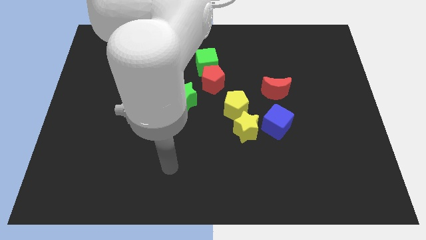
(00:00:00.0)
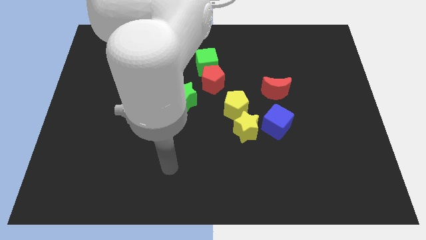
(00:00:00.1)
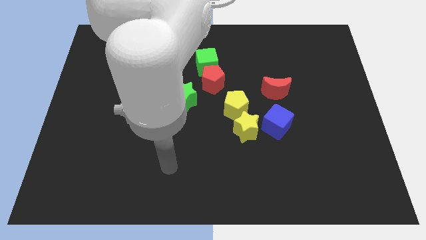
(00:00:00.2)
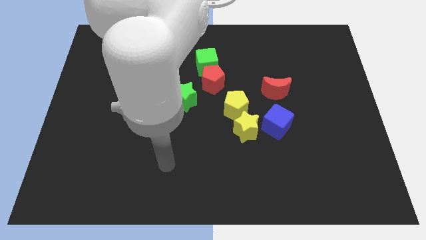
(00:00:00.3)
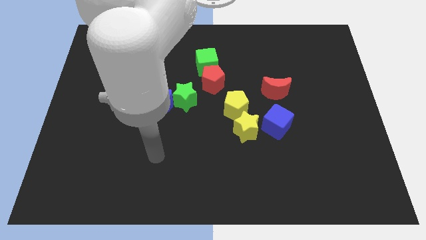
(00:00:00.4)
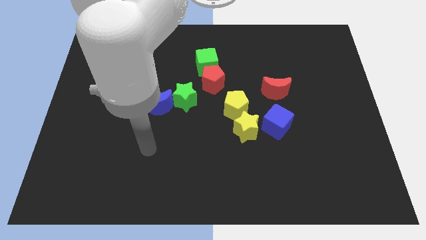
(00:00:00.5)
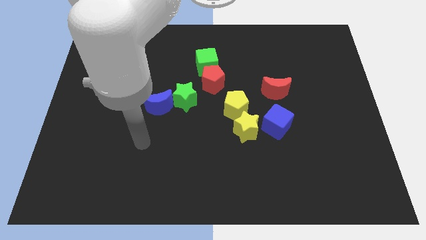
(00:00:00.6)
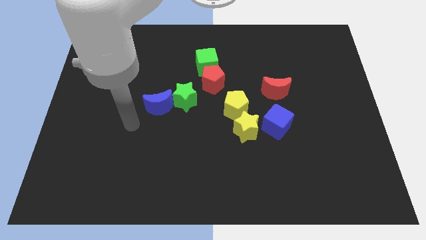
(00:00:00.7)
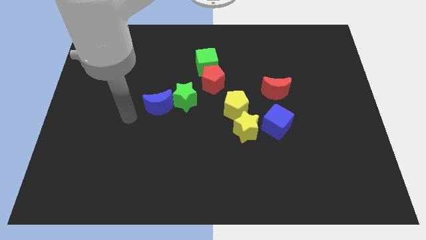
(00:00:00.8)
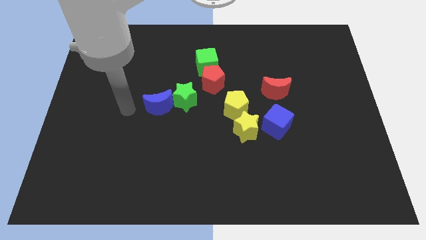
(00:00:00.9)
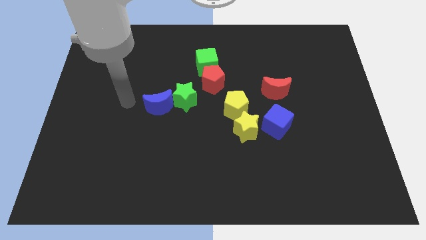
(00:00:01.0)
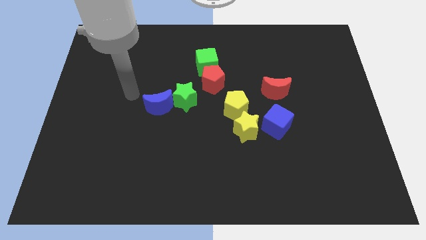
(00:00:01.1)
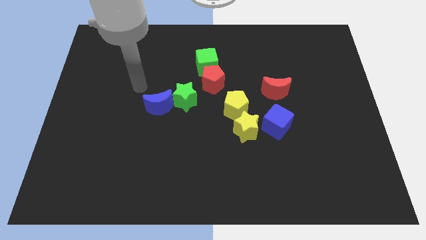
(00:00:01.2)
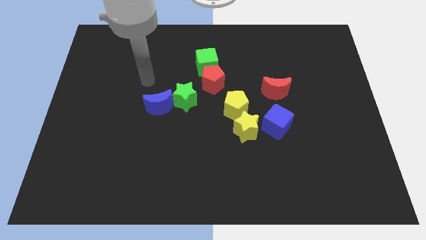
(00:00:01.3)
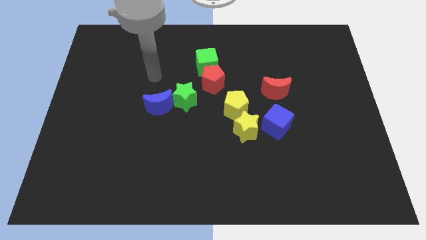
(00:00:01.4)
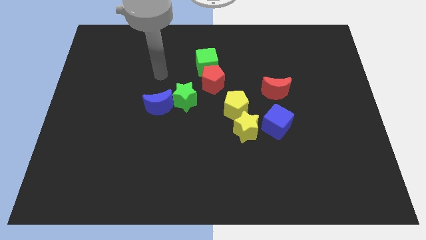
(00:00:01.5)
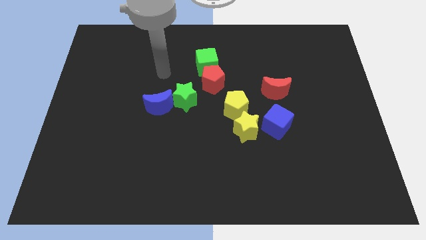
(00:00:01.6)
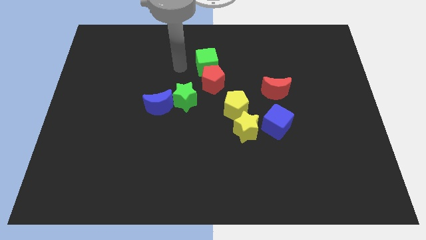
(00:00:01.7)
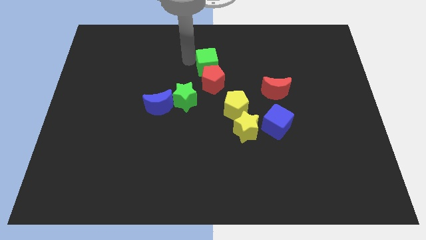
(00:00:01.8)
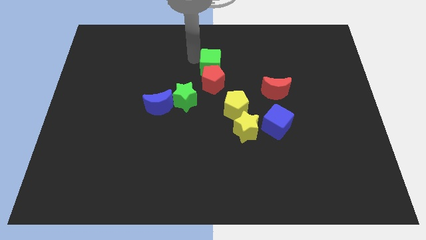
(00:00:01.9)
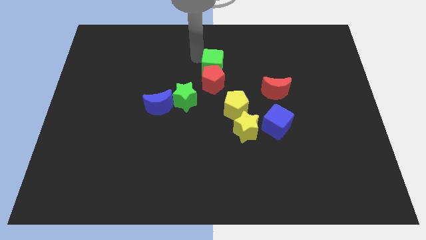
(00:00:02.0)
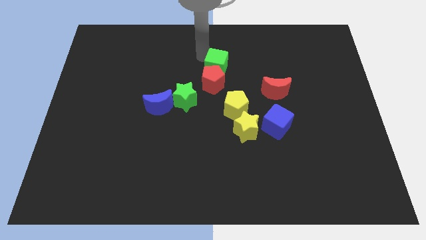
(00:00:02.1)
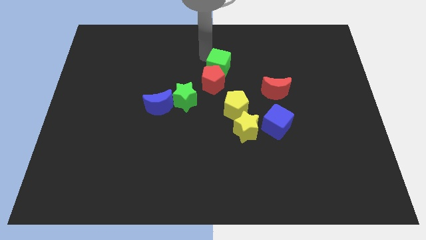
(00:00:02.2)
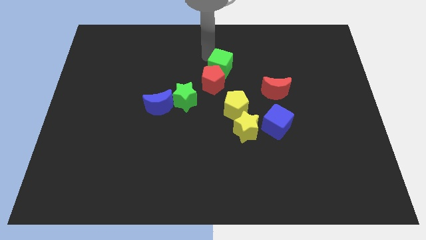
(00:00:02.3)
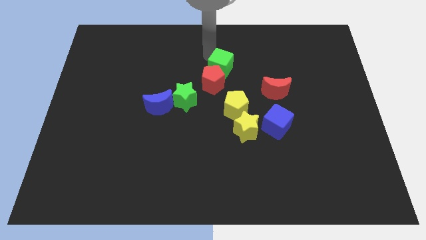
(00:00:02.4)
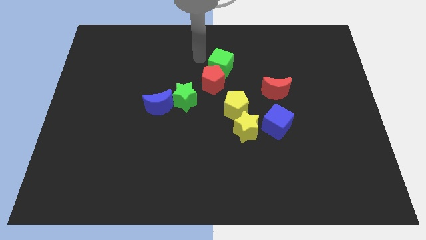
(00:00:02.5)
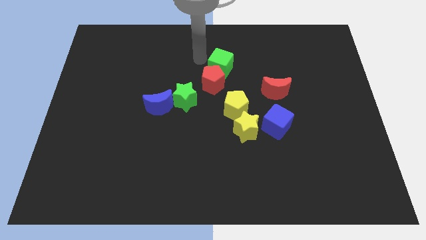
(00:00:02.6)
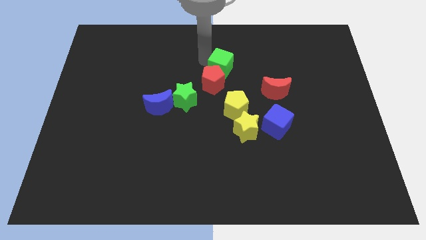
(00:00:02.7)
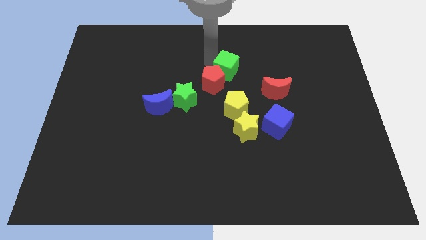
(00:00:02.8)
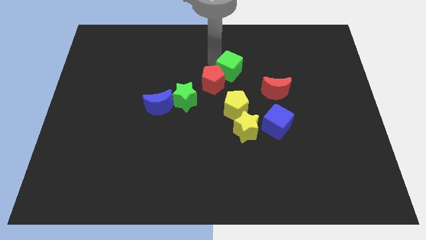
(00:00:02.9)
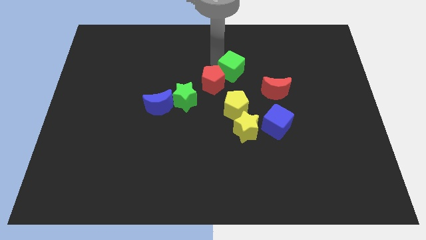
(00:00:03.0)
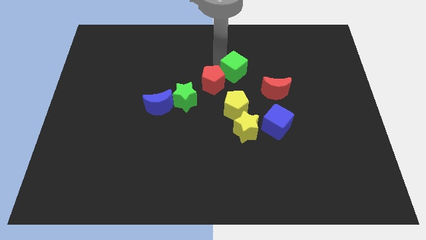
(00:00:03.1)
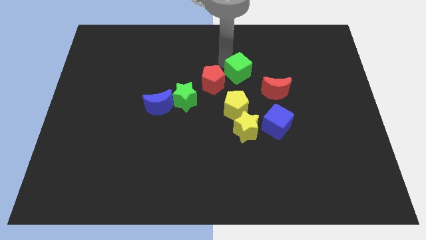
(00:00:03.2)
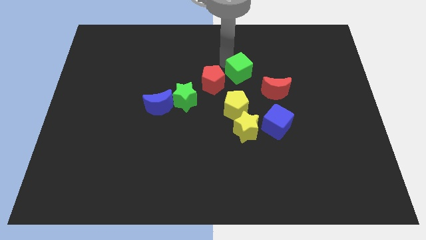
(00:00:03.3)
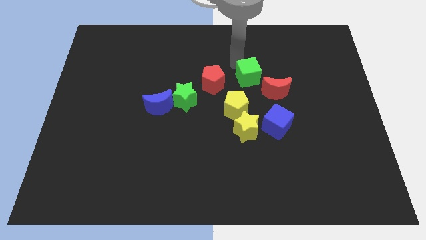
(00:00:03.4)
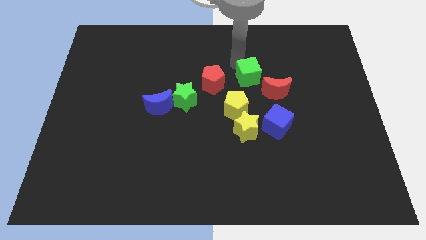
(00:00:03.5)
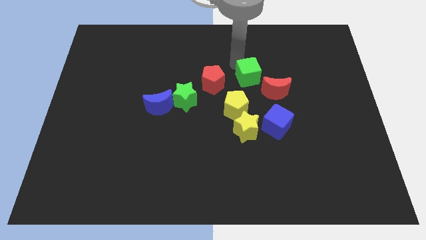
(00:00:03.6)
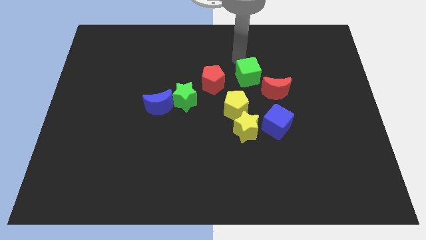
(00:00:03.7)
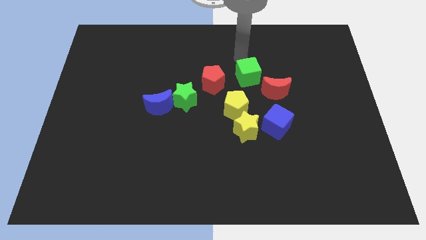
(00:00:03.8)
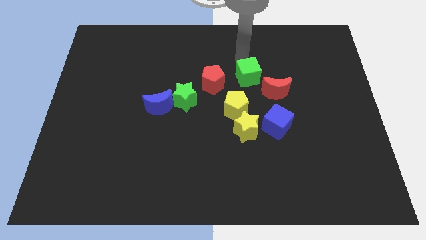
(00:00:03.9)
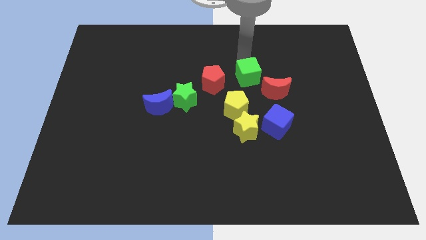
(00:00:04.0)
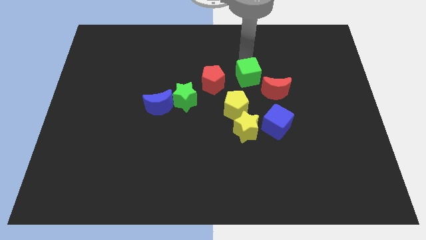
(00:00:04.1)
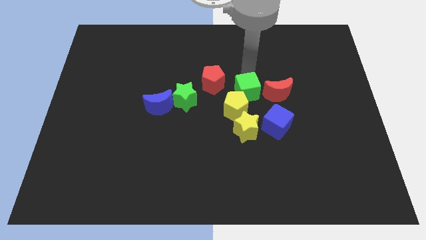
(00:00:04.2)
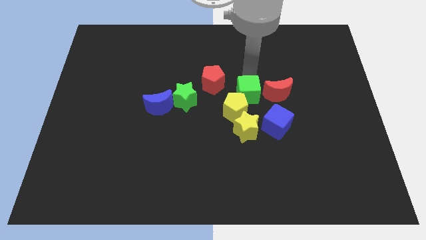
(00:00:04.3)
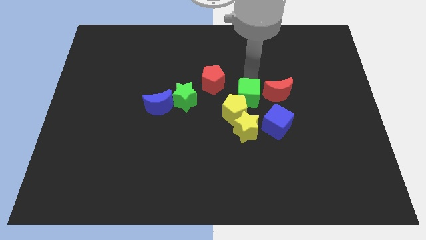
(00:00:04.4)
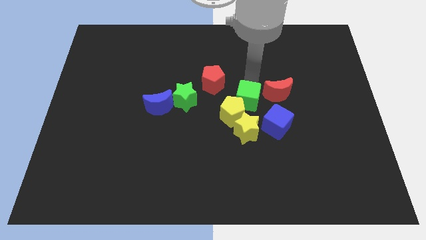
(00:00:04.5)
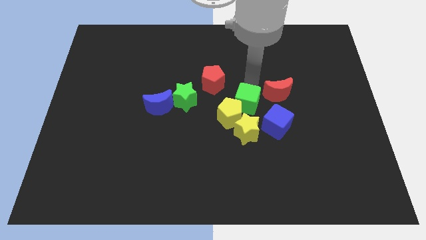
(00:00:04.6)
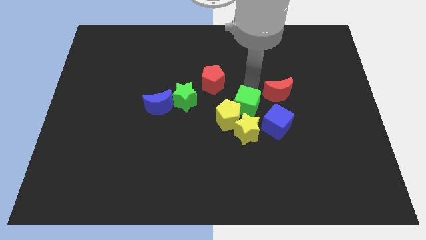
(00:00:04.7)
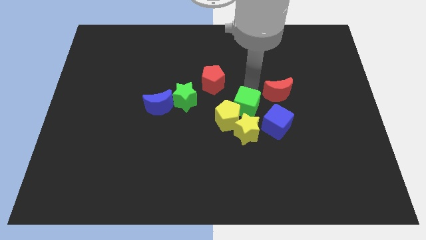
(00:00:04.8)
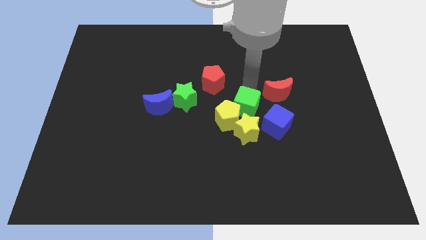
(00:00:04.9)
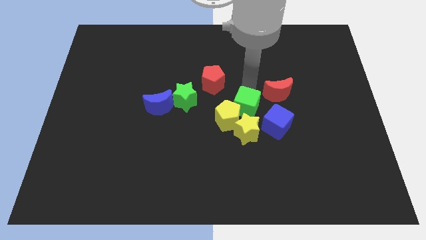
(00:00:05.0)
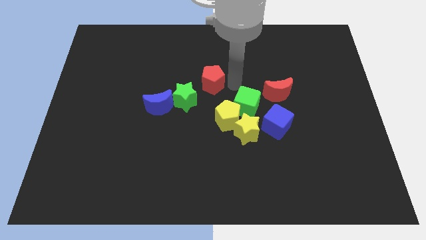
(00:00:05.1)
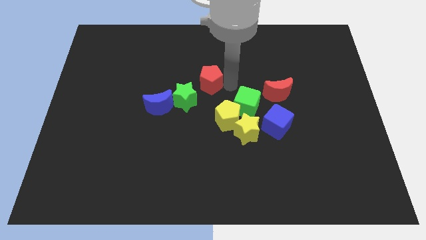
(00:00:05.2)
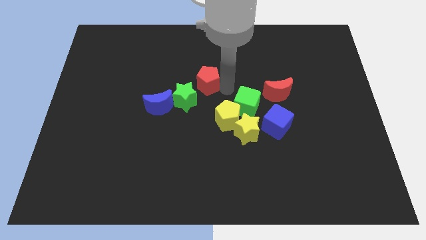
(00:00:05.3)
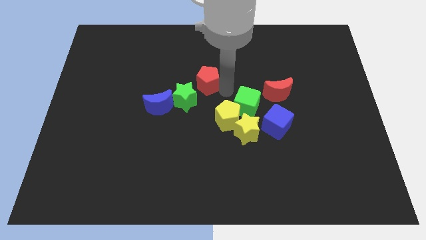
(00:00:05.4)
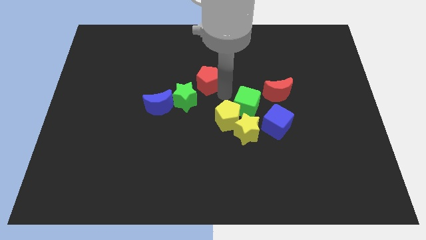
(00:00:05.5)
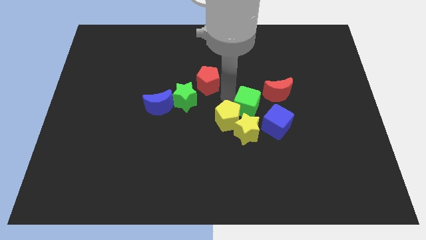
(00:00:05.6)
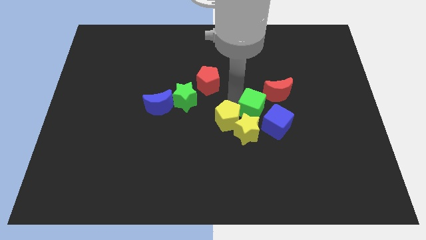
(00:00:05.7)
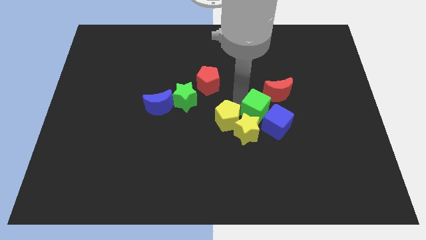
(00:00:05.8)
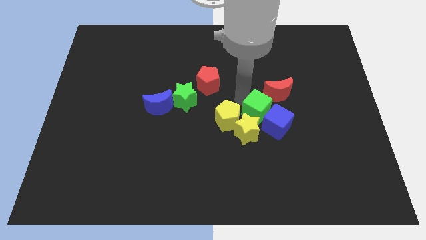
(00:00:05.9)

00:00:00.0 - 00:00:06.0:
move the green cube close to the blue cube

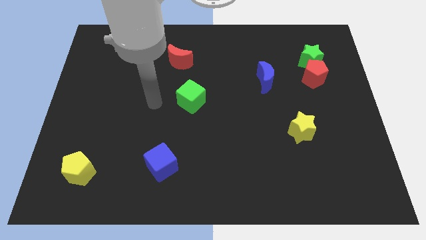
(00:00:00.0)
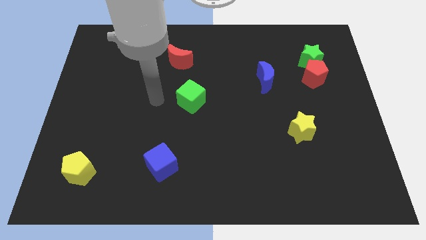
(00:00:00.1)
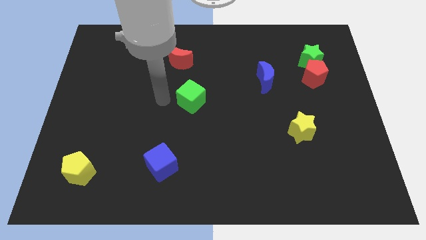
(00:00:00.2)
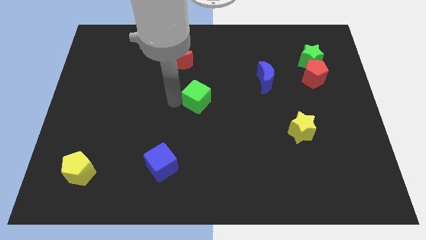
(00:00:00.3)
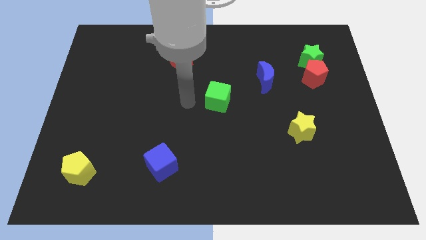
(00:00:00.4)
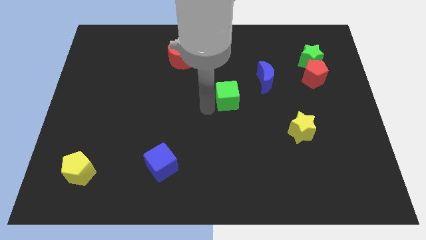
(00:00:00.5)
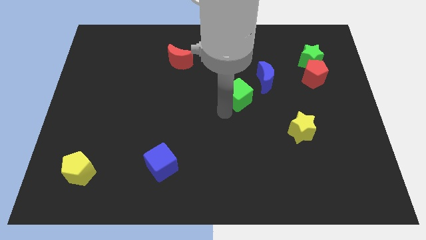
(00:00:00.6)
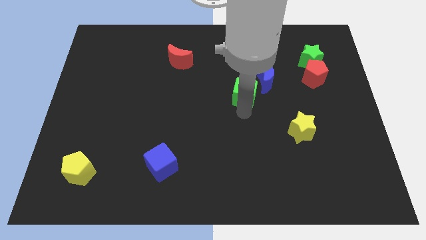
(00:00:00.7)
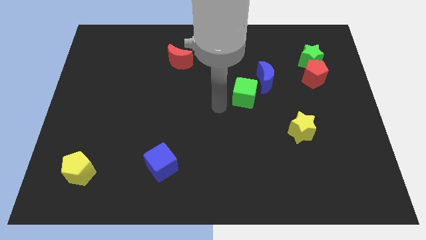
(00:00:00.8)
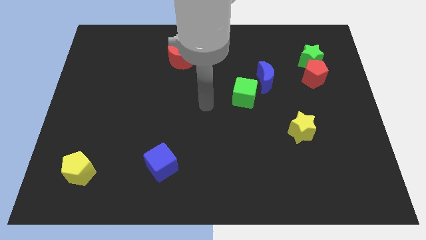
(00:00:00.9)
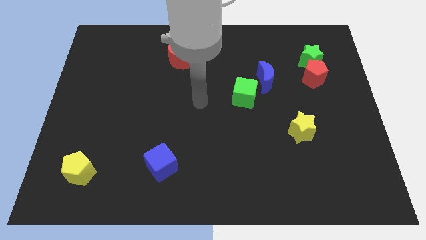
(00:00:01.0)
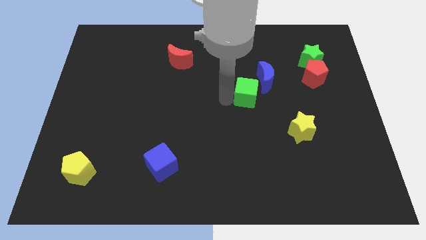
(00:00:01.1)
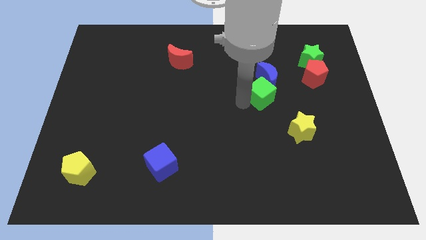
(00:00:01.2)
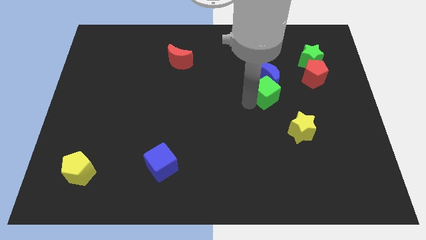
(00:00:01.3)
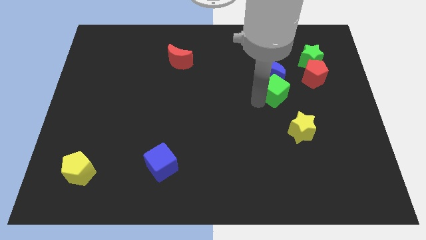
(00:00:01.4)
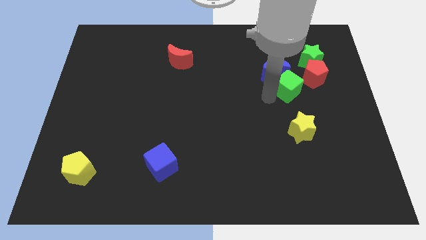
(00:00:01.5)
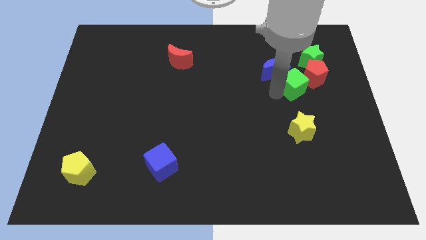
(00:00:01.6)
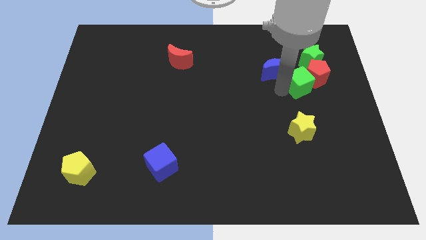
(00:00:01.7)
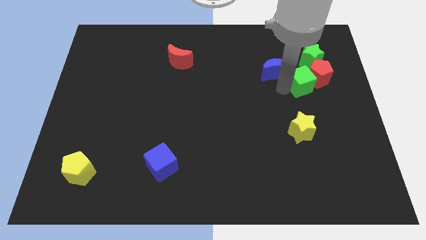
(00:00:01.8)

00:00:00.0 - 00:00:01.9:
push the green cube close to the red pentagon

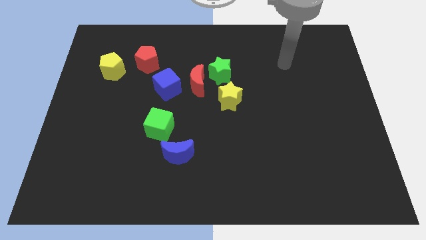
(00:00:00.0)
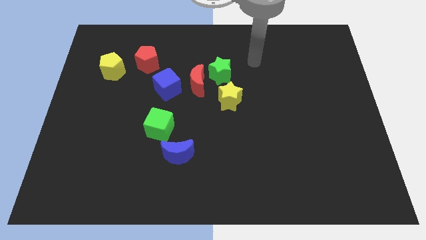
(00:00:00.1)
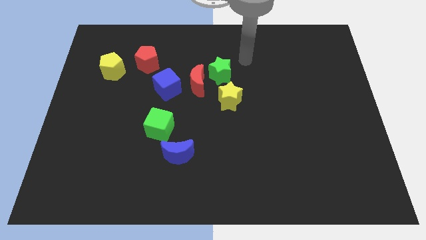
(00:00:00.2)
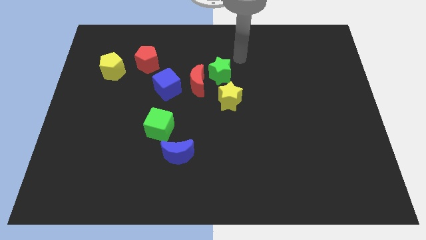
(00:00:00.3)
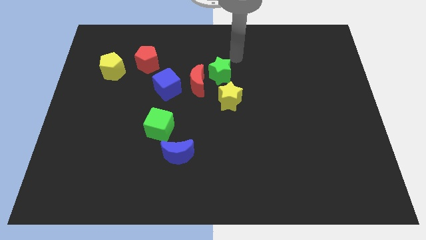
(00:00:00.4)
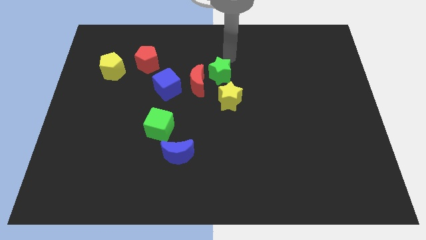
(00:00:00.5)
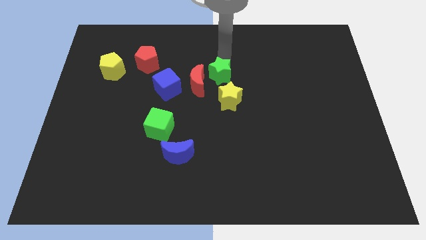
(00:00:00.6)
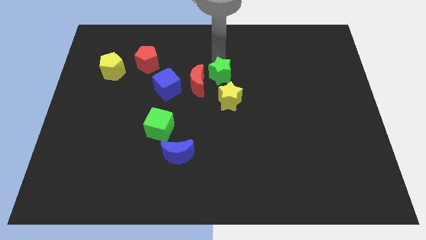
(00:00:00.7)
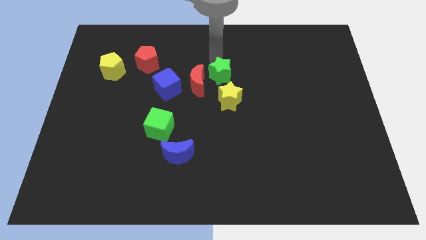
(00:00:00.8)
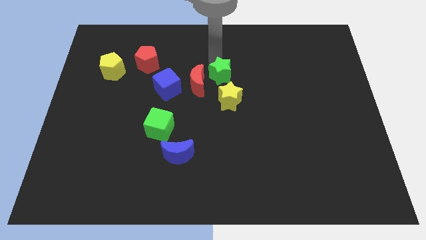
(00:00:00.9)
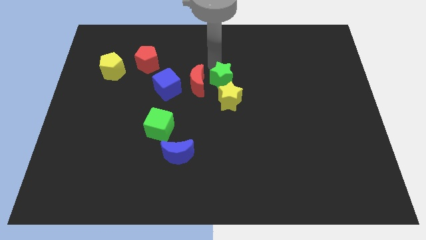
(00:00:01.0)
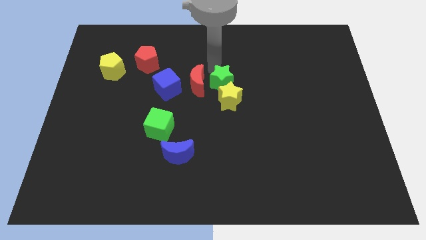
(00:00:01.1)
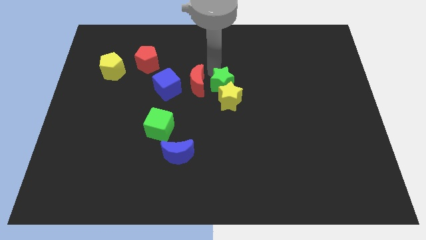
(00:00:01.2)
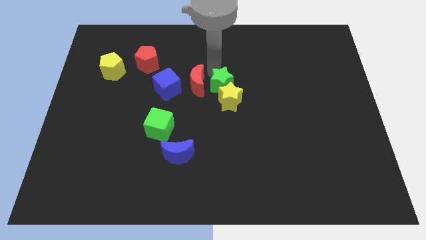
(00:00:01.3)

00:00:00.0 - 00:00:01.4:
move the green star next to the yellow star
